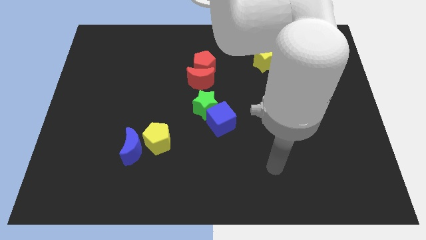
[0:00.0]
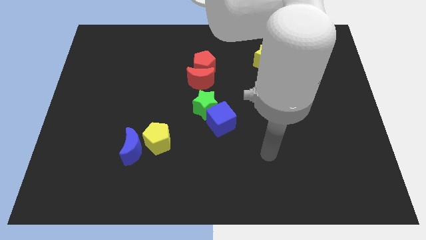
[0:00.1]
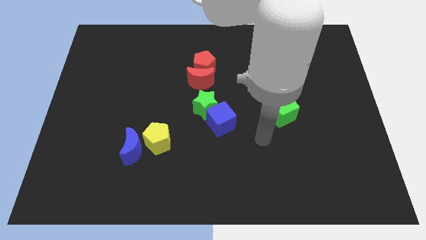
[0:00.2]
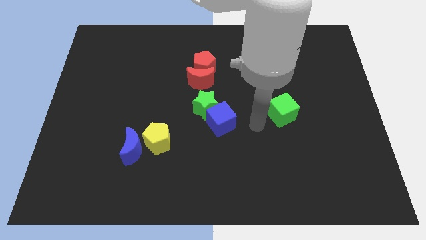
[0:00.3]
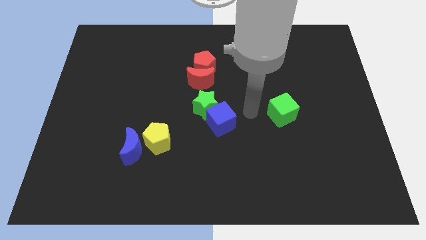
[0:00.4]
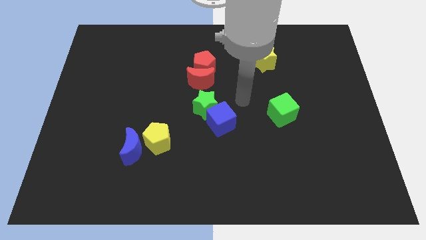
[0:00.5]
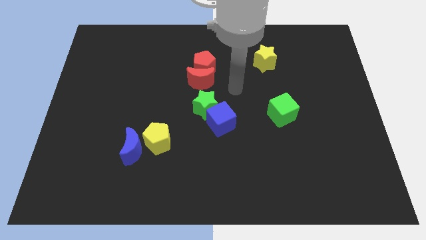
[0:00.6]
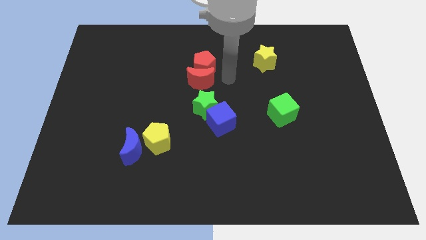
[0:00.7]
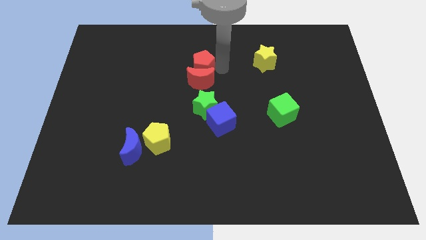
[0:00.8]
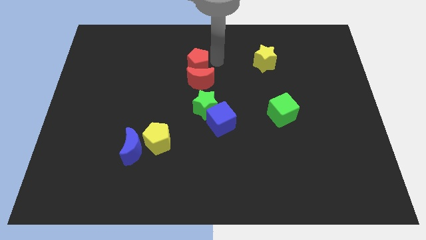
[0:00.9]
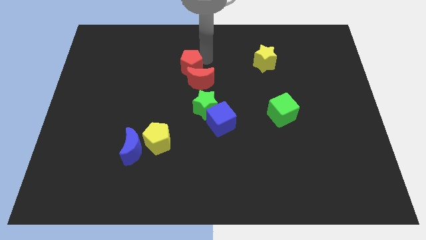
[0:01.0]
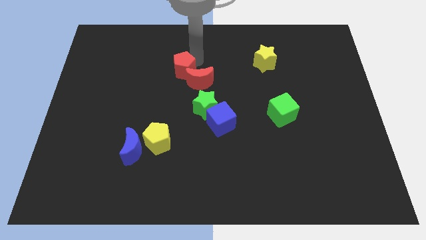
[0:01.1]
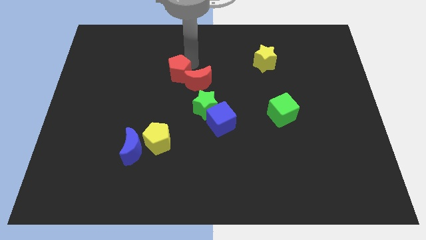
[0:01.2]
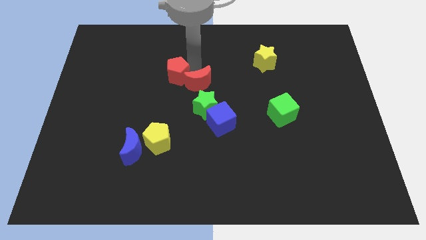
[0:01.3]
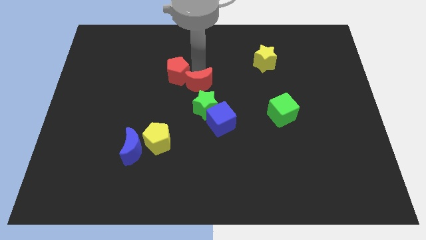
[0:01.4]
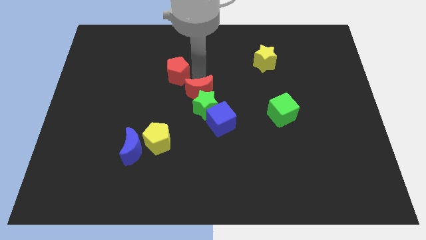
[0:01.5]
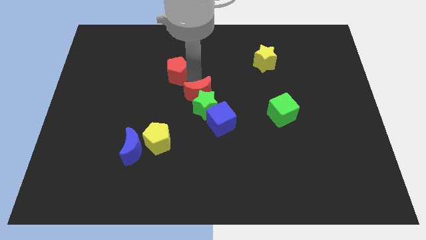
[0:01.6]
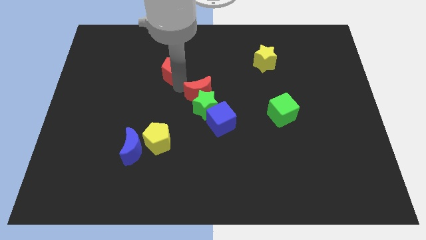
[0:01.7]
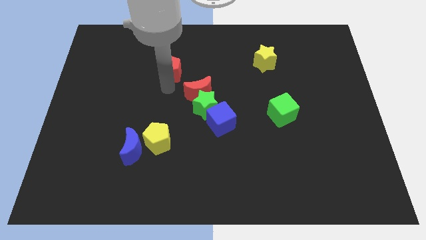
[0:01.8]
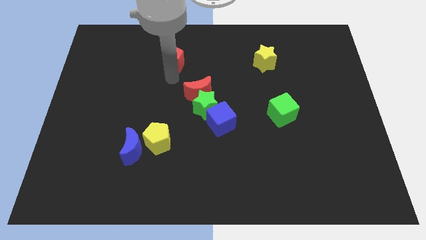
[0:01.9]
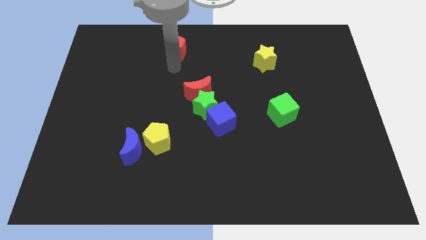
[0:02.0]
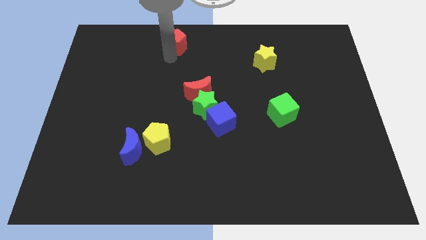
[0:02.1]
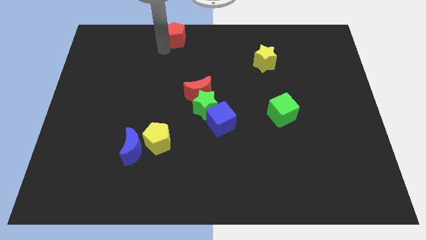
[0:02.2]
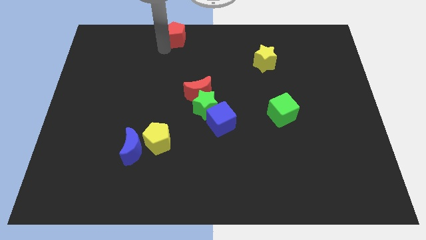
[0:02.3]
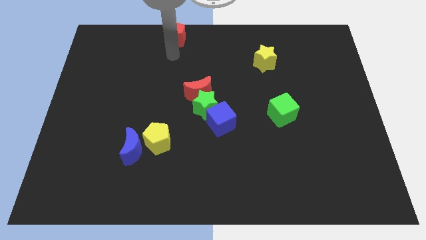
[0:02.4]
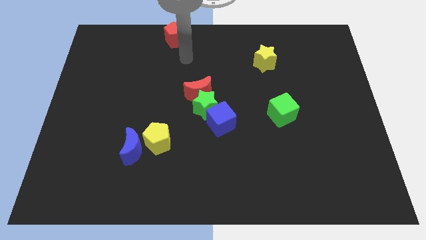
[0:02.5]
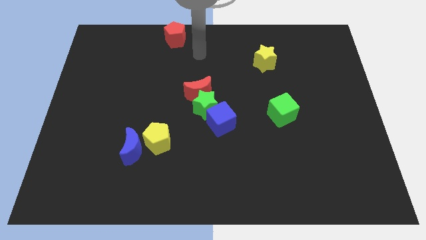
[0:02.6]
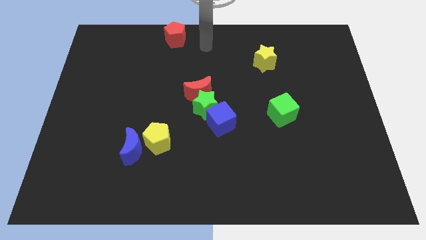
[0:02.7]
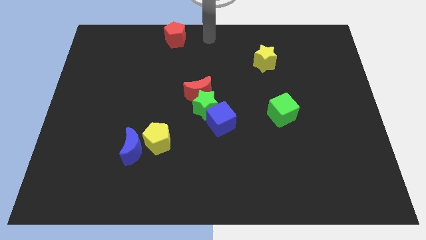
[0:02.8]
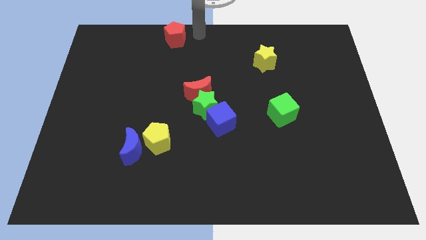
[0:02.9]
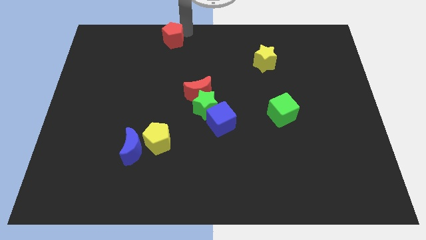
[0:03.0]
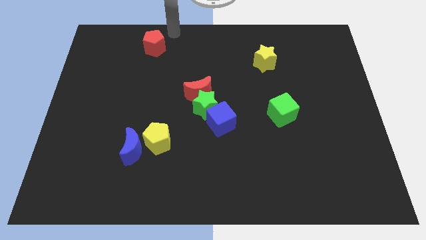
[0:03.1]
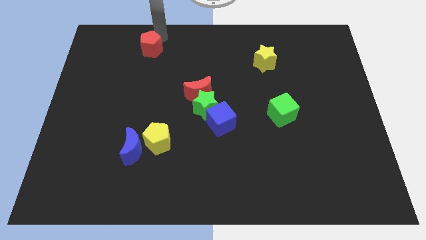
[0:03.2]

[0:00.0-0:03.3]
move the red pentagon away from red crescent

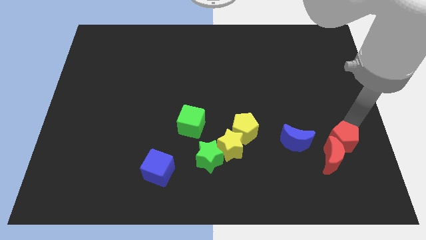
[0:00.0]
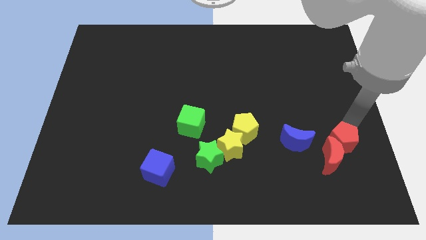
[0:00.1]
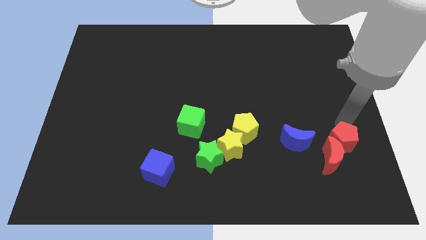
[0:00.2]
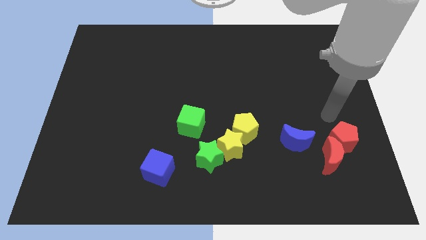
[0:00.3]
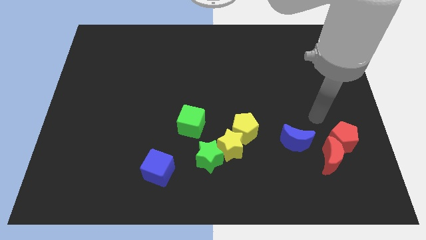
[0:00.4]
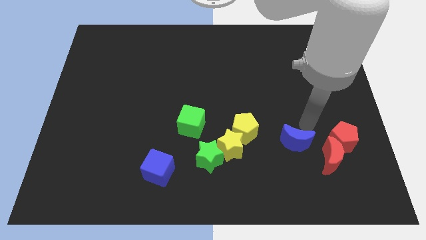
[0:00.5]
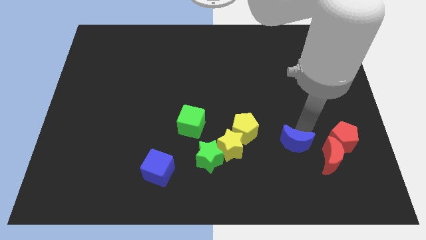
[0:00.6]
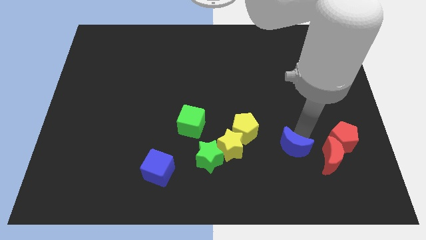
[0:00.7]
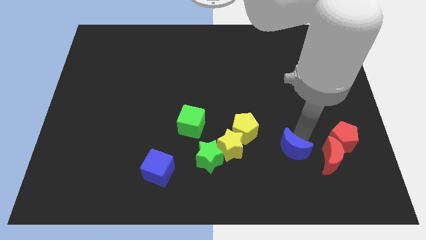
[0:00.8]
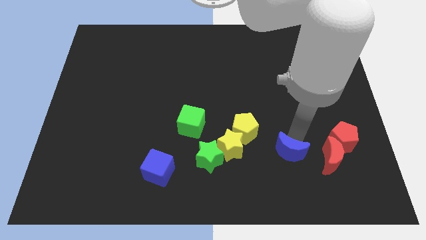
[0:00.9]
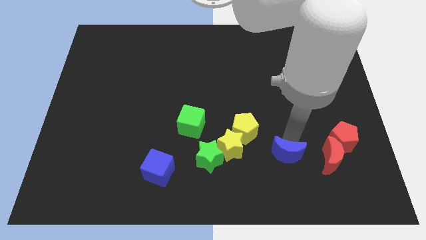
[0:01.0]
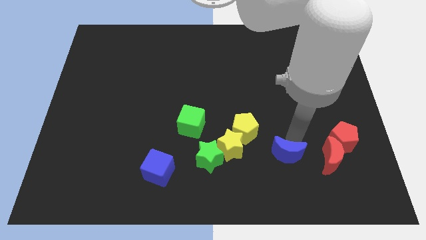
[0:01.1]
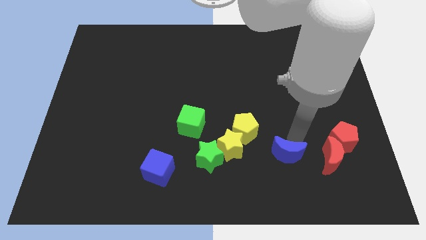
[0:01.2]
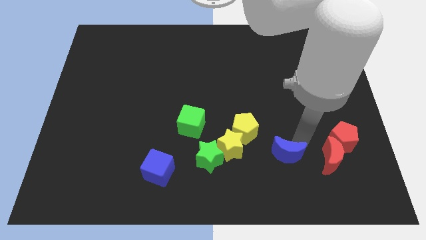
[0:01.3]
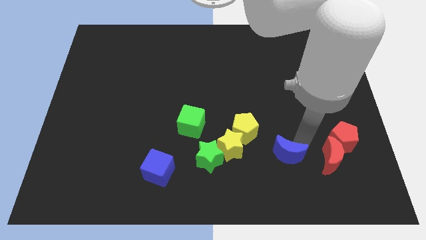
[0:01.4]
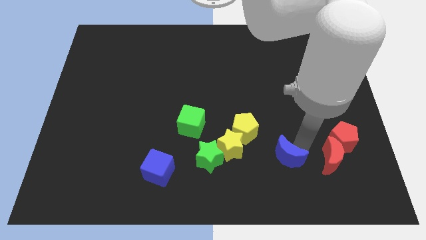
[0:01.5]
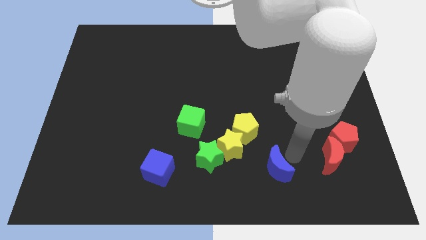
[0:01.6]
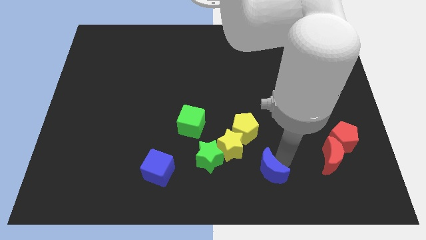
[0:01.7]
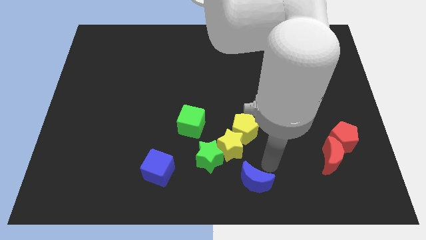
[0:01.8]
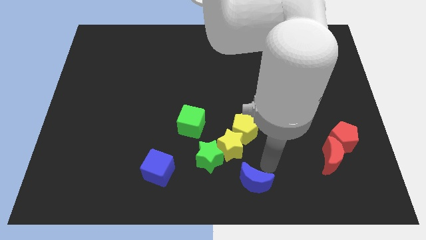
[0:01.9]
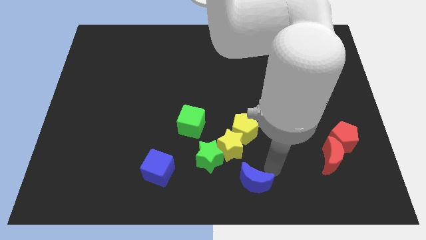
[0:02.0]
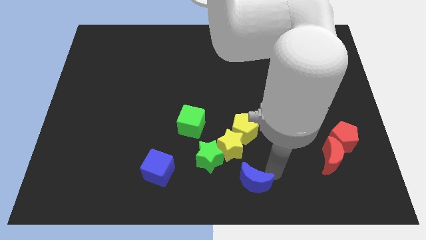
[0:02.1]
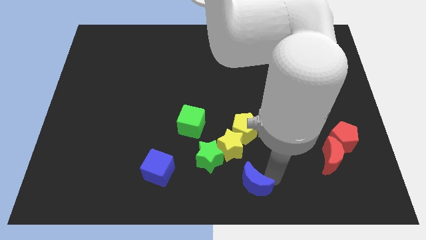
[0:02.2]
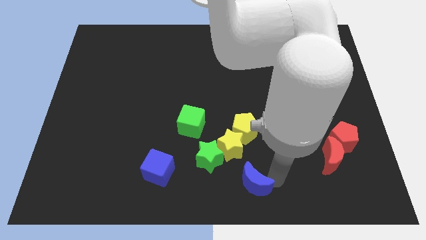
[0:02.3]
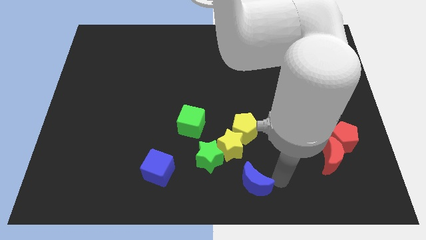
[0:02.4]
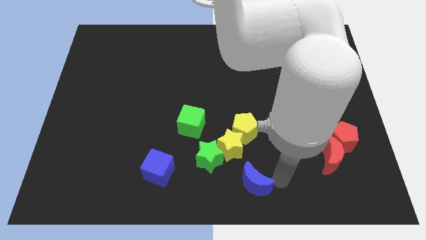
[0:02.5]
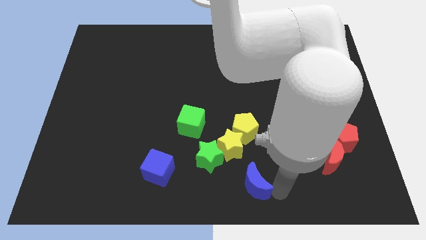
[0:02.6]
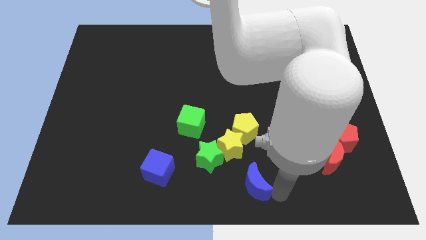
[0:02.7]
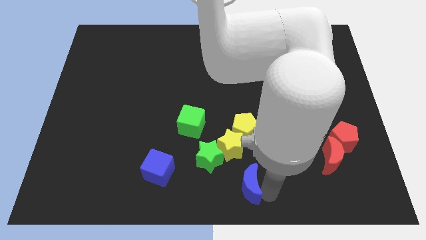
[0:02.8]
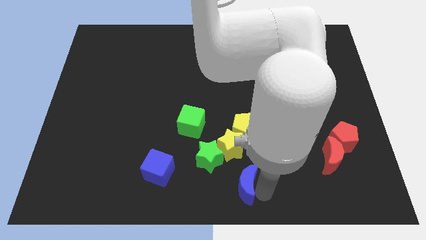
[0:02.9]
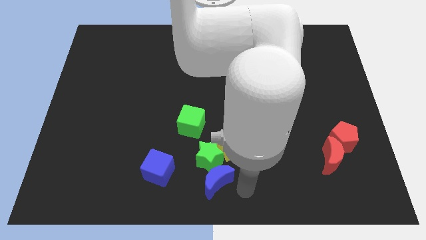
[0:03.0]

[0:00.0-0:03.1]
slide the blue moon to the bottom of the green star

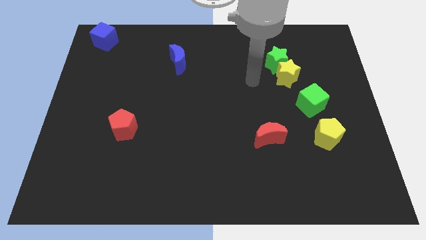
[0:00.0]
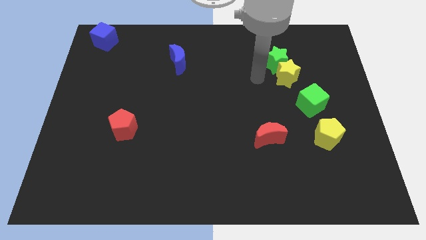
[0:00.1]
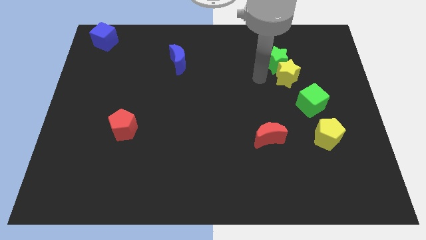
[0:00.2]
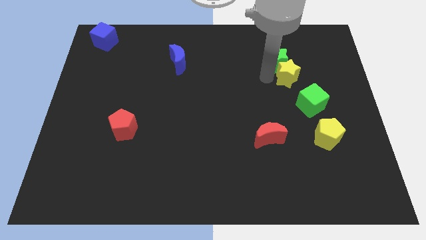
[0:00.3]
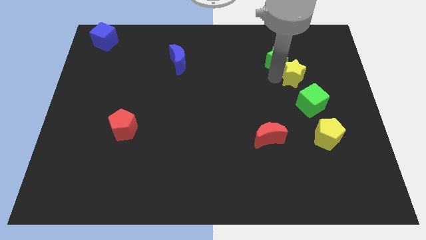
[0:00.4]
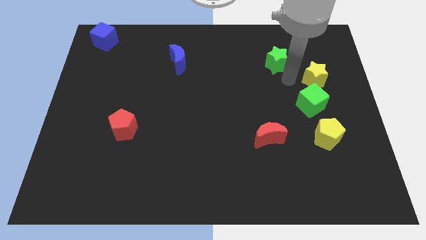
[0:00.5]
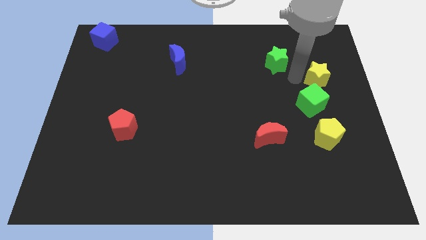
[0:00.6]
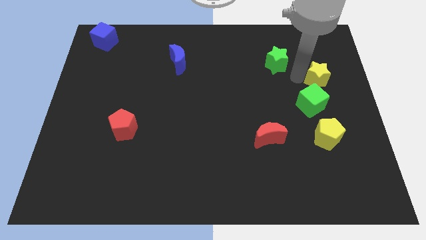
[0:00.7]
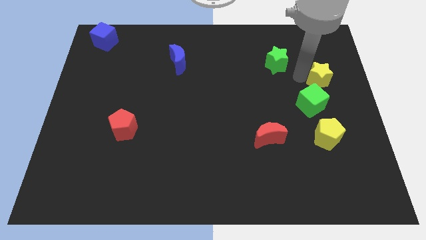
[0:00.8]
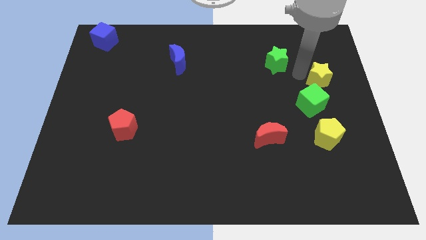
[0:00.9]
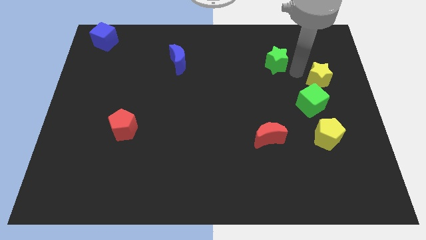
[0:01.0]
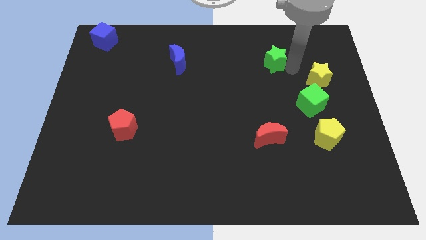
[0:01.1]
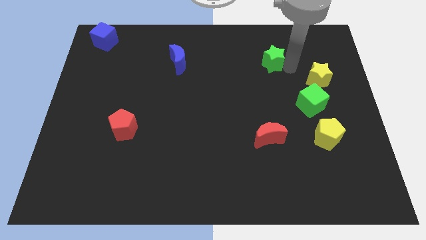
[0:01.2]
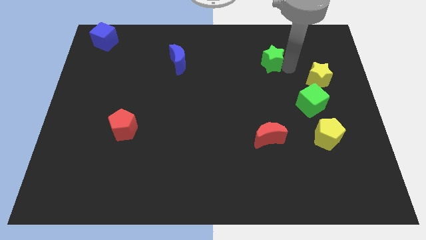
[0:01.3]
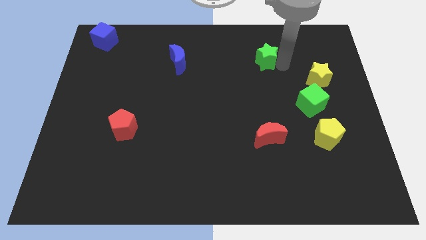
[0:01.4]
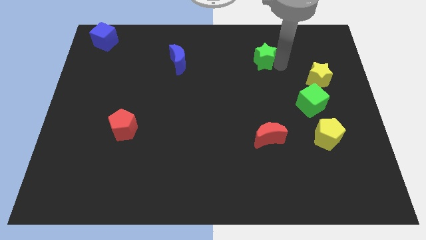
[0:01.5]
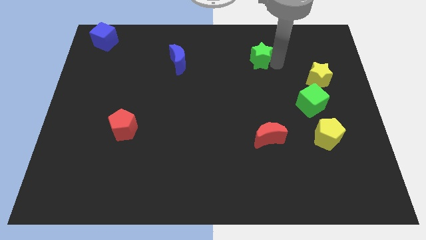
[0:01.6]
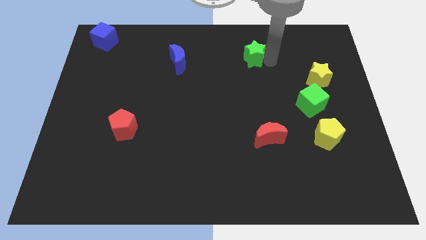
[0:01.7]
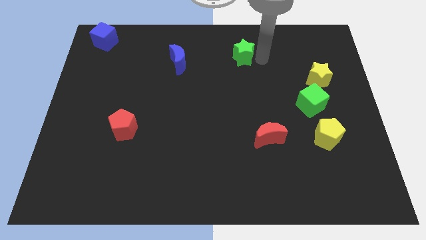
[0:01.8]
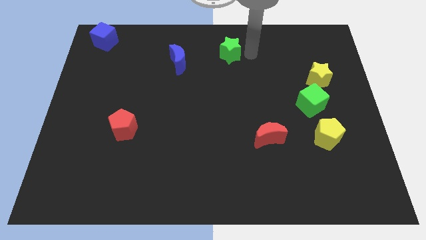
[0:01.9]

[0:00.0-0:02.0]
seperate the green star and yellow star

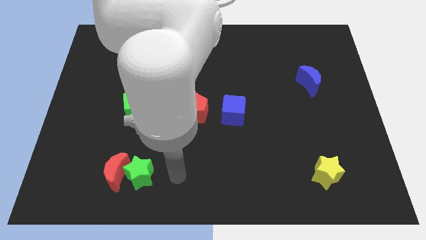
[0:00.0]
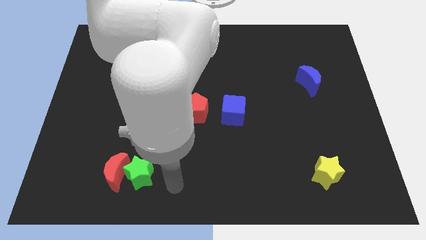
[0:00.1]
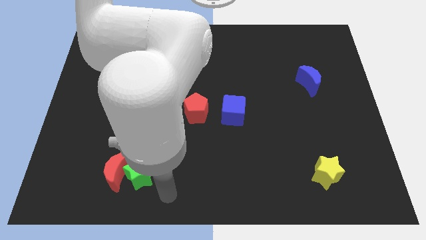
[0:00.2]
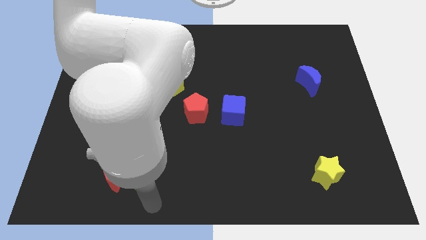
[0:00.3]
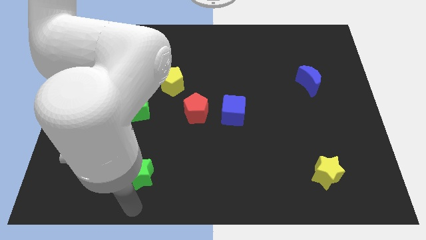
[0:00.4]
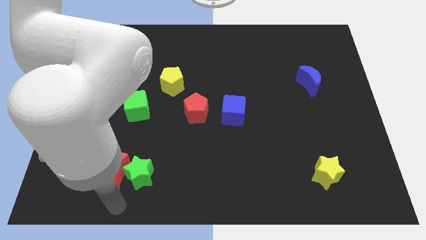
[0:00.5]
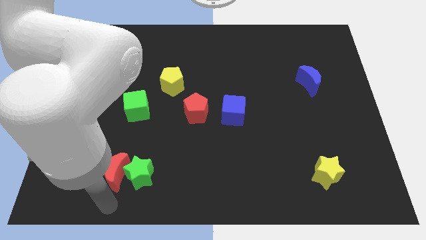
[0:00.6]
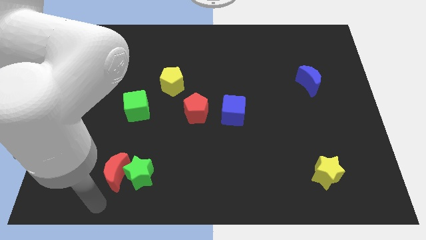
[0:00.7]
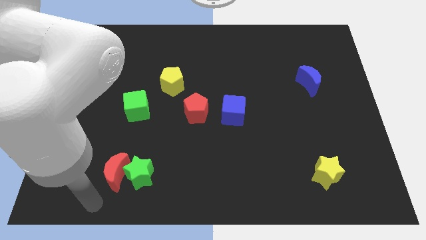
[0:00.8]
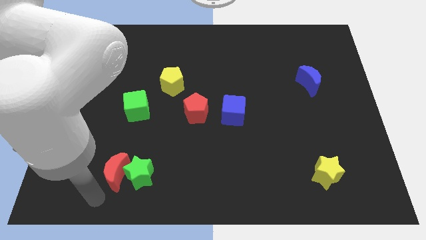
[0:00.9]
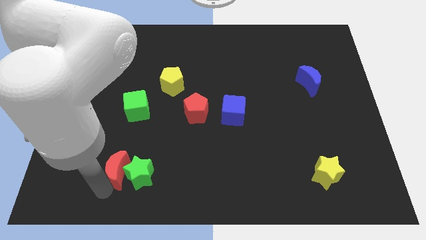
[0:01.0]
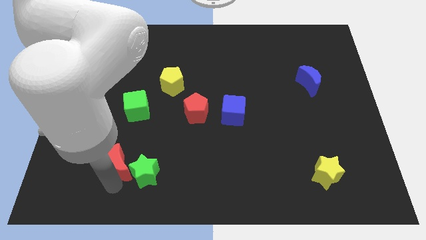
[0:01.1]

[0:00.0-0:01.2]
tap the red crescent
